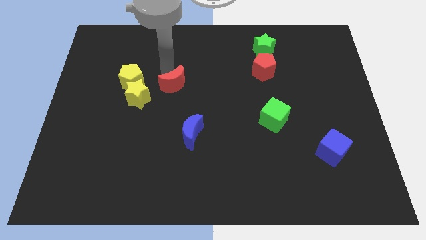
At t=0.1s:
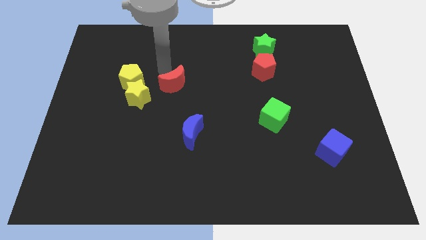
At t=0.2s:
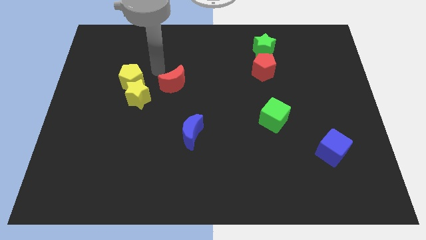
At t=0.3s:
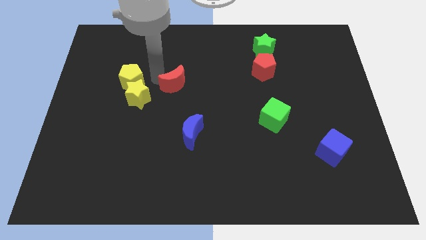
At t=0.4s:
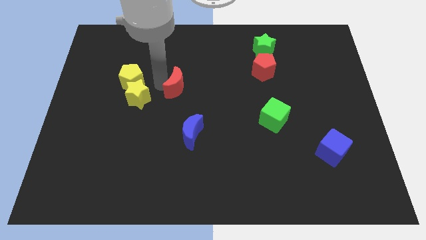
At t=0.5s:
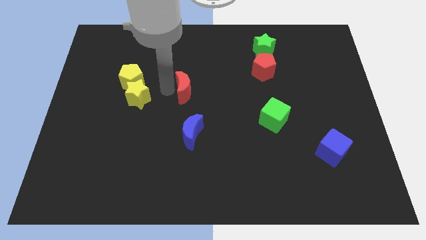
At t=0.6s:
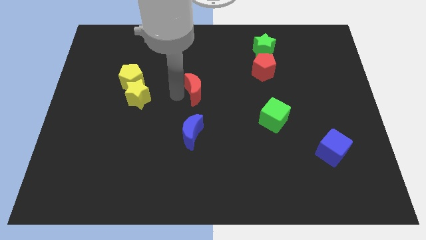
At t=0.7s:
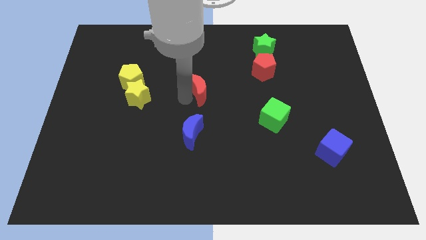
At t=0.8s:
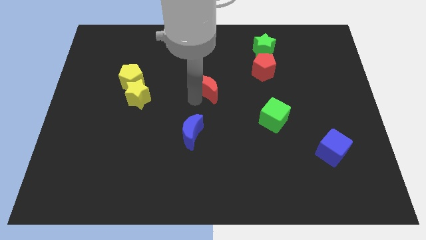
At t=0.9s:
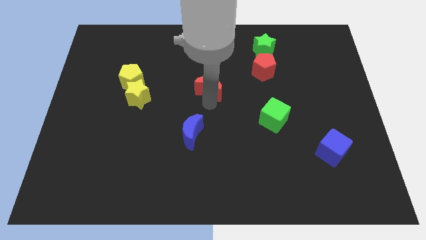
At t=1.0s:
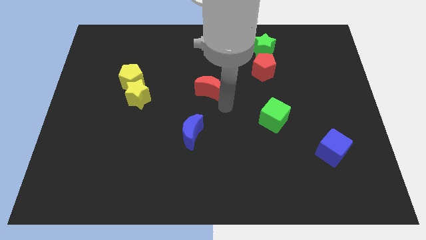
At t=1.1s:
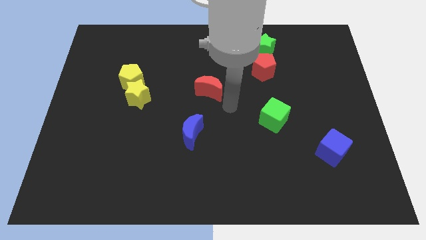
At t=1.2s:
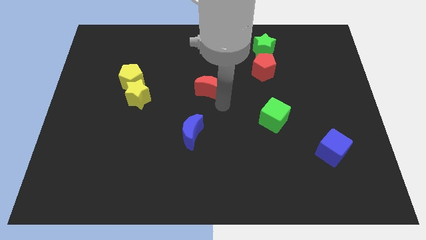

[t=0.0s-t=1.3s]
push the red crescent to the center of the board

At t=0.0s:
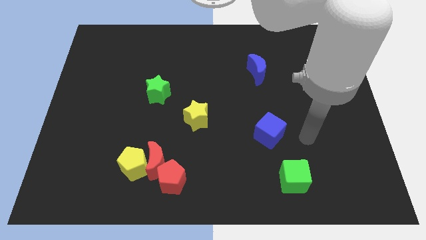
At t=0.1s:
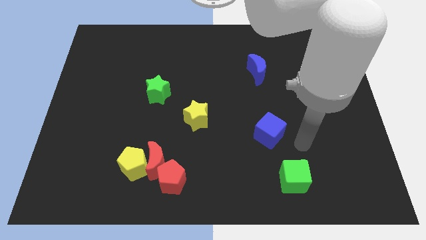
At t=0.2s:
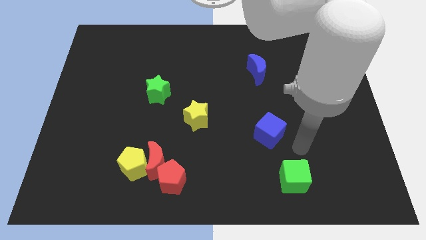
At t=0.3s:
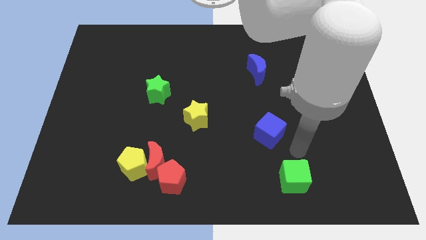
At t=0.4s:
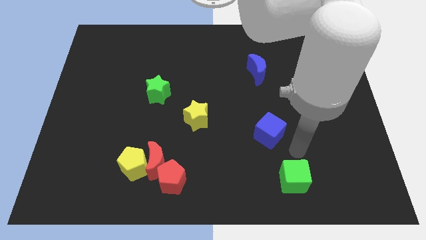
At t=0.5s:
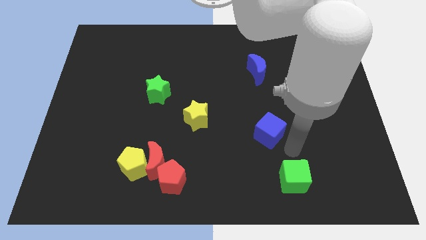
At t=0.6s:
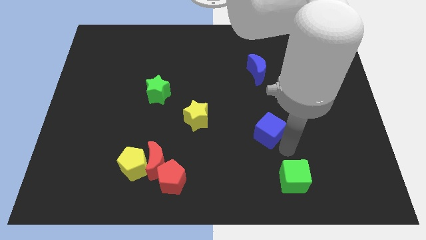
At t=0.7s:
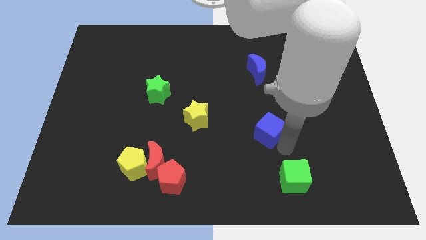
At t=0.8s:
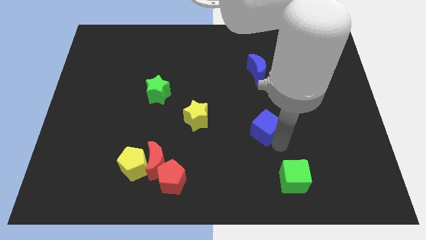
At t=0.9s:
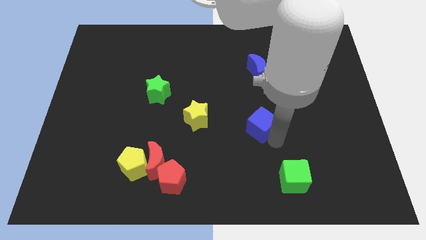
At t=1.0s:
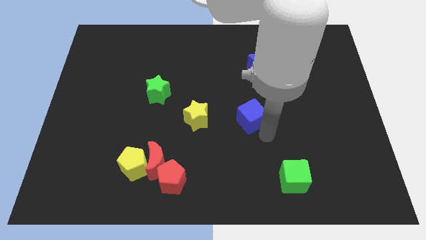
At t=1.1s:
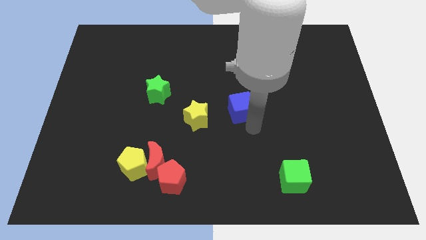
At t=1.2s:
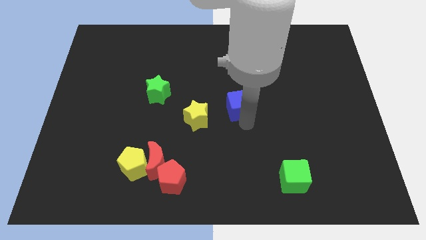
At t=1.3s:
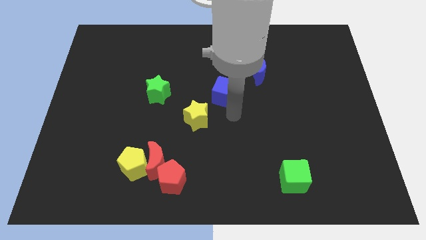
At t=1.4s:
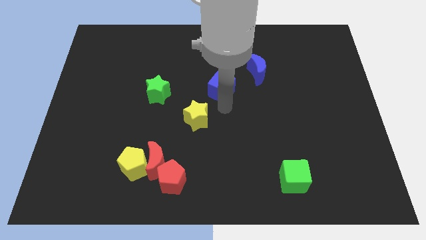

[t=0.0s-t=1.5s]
place the blue cube in between the blue moon and yellow star

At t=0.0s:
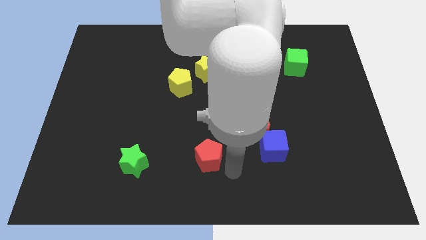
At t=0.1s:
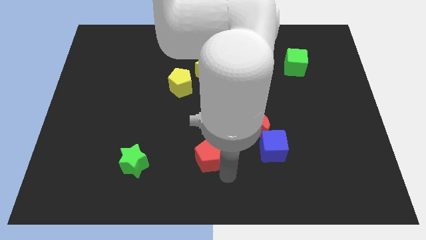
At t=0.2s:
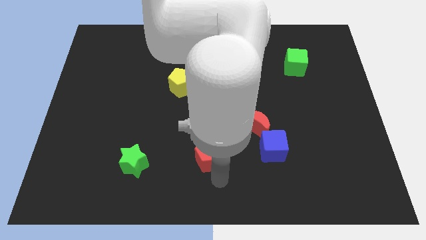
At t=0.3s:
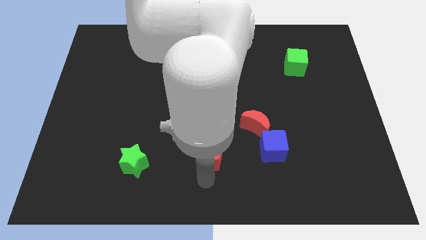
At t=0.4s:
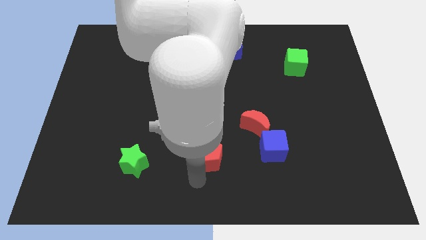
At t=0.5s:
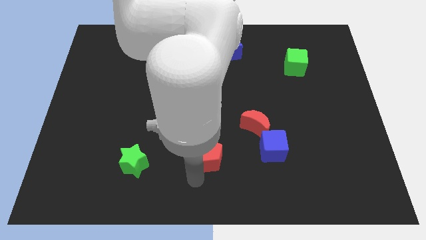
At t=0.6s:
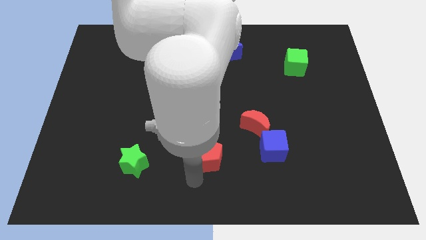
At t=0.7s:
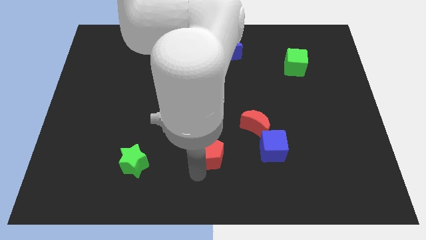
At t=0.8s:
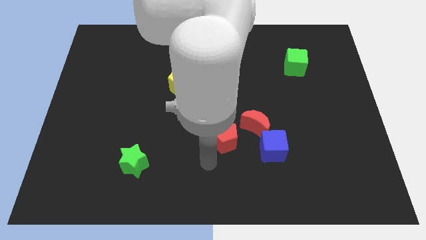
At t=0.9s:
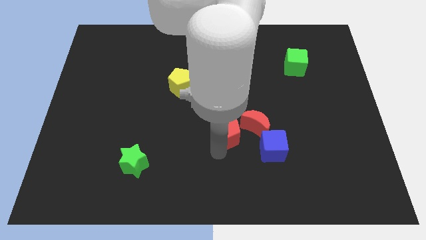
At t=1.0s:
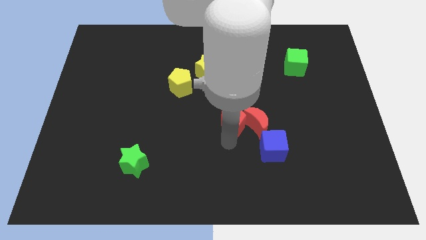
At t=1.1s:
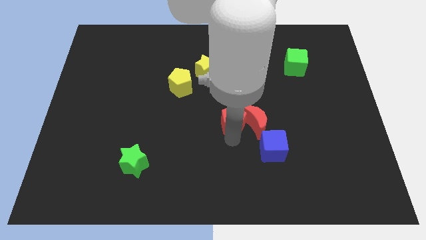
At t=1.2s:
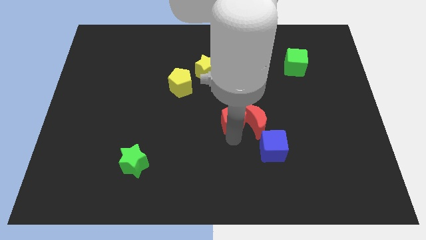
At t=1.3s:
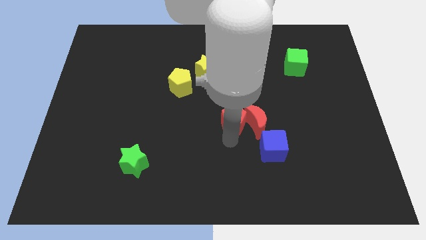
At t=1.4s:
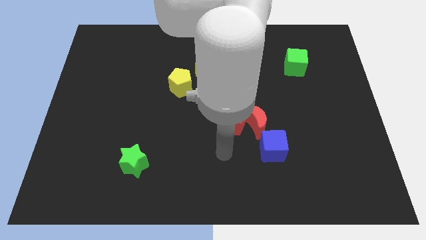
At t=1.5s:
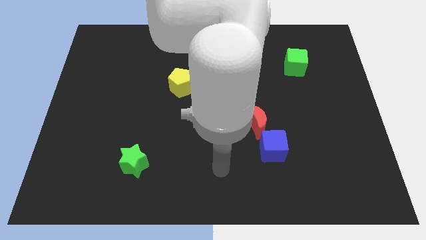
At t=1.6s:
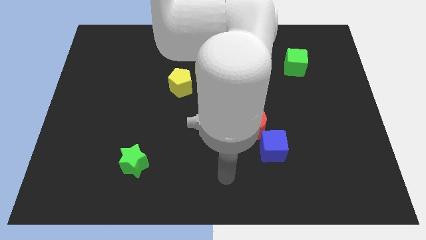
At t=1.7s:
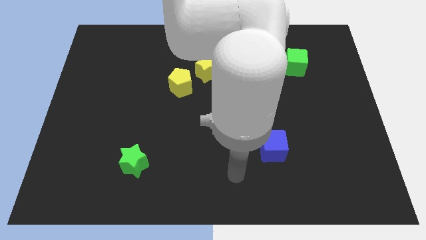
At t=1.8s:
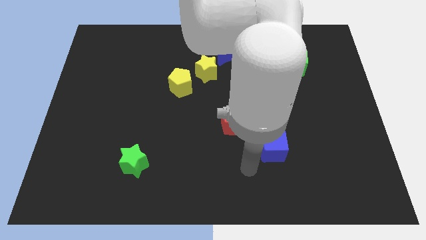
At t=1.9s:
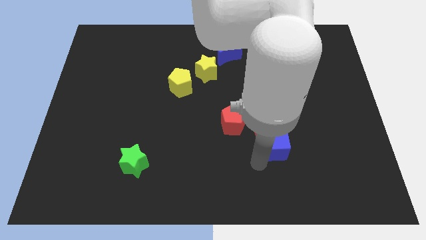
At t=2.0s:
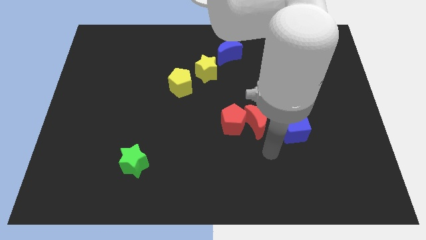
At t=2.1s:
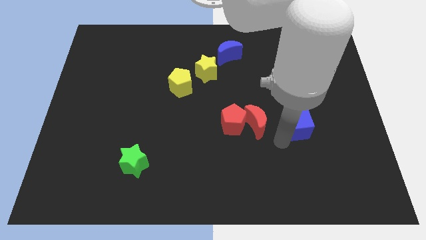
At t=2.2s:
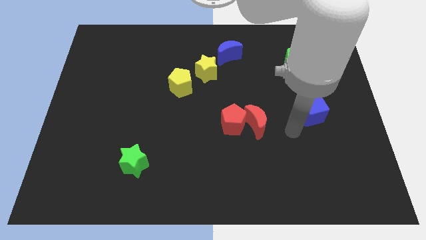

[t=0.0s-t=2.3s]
place blue cube parallel to red moon

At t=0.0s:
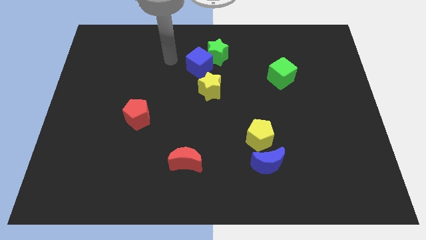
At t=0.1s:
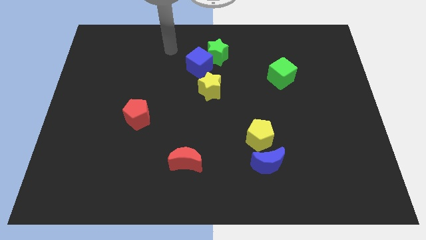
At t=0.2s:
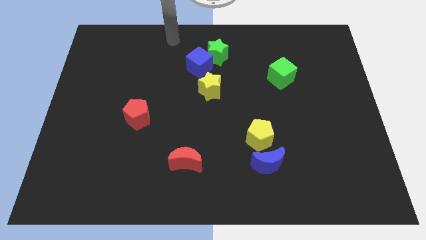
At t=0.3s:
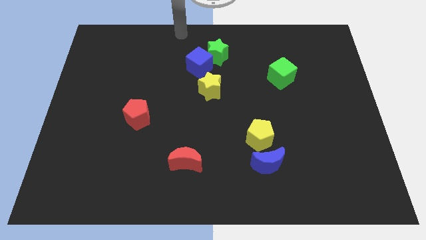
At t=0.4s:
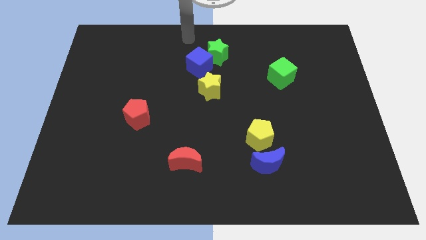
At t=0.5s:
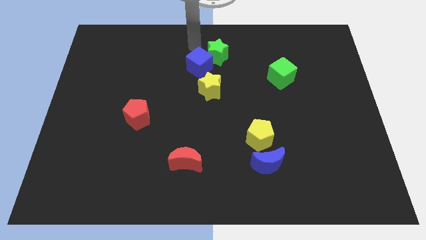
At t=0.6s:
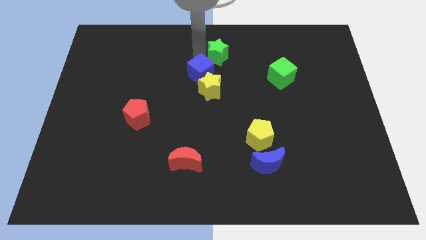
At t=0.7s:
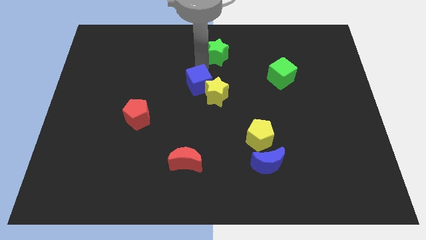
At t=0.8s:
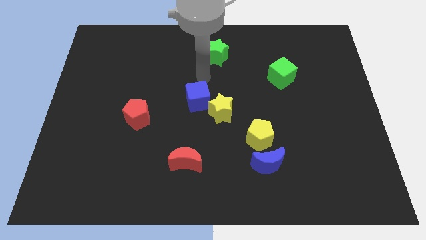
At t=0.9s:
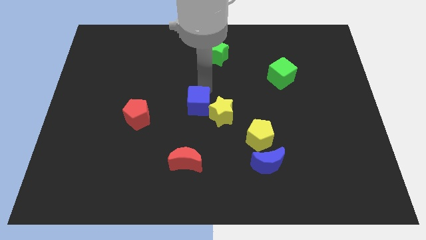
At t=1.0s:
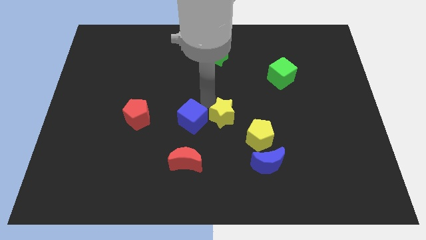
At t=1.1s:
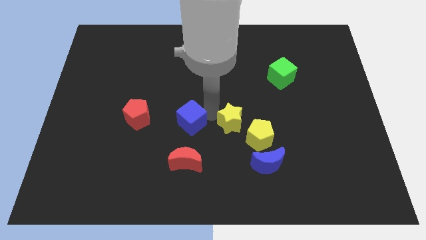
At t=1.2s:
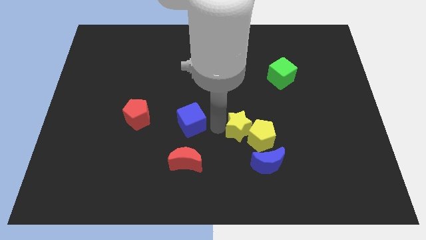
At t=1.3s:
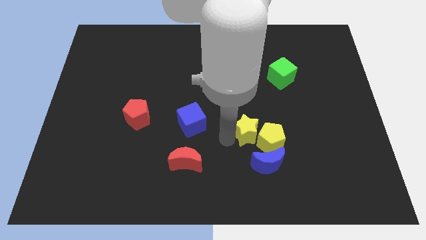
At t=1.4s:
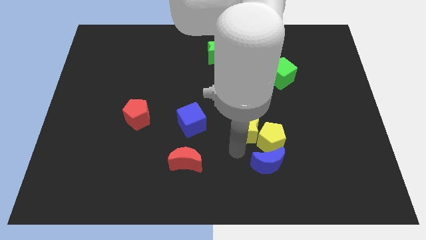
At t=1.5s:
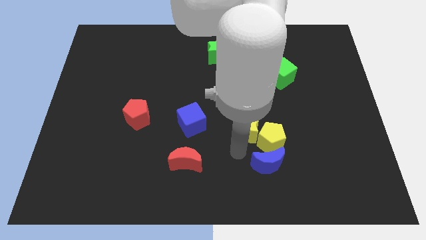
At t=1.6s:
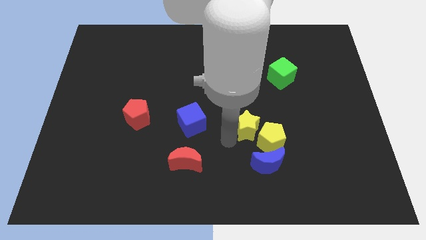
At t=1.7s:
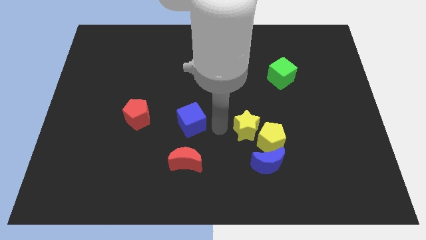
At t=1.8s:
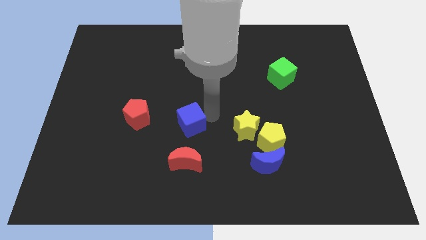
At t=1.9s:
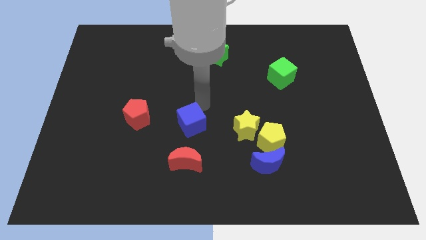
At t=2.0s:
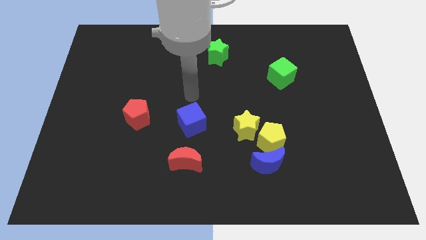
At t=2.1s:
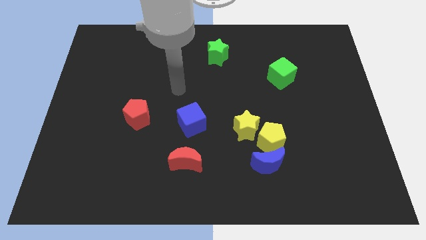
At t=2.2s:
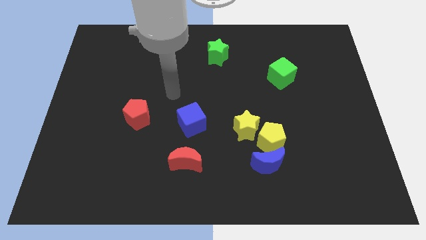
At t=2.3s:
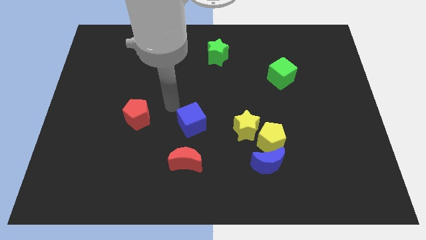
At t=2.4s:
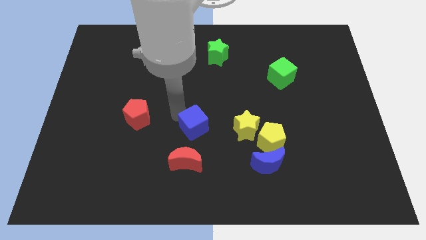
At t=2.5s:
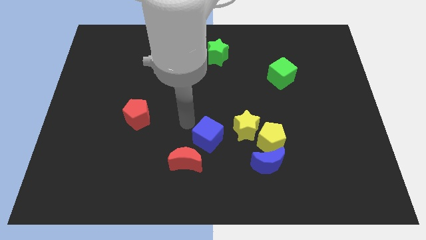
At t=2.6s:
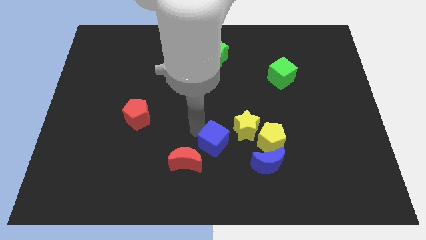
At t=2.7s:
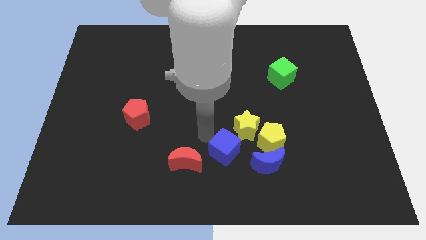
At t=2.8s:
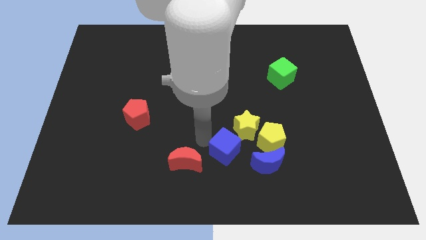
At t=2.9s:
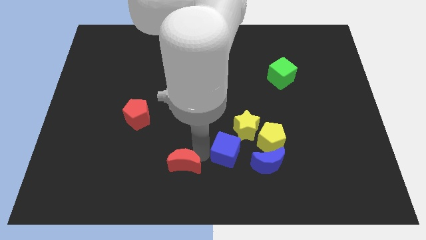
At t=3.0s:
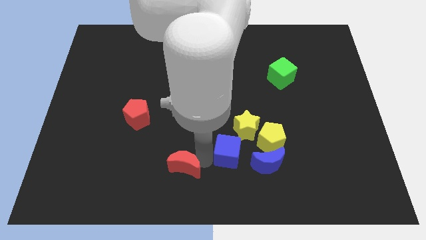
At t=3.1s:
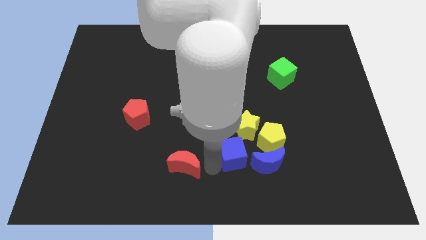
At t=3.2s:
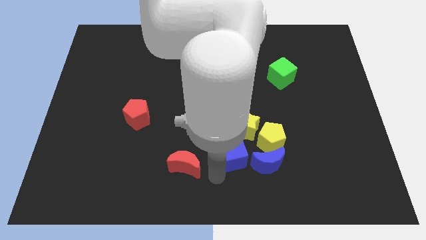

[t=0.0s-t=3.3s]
push the yellow and blue blocks together to the right of the red blocks

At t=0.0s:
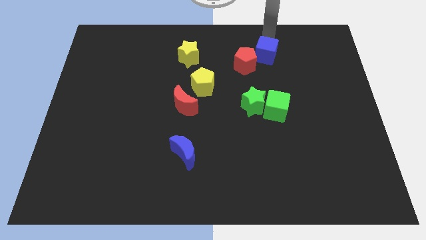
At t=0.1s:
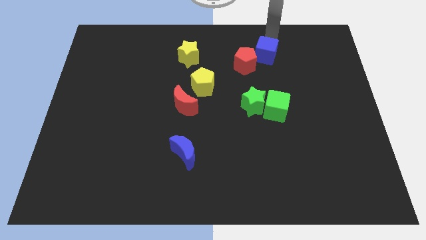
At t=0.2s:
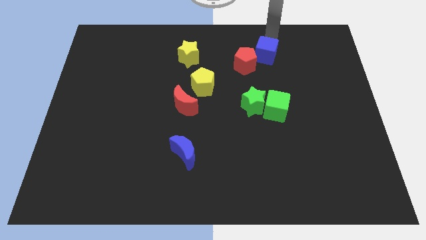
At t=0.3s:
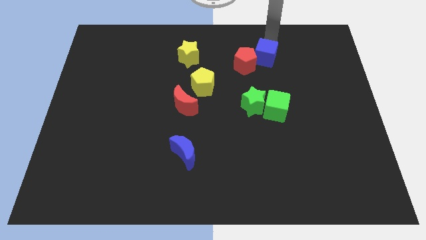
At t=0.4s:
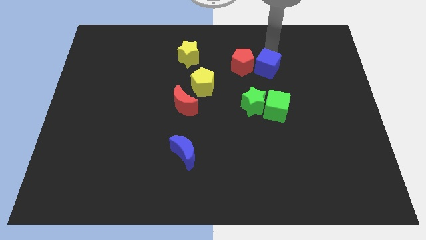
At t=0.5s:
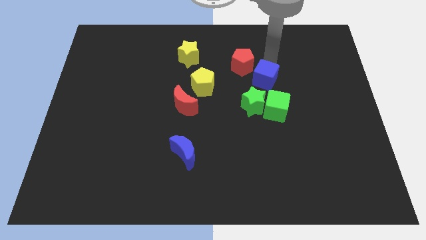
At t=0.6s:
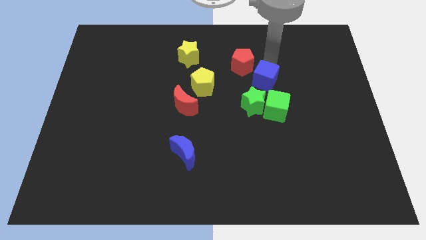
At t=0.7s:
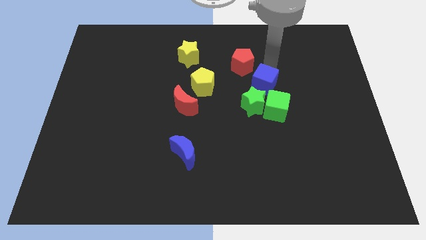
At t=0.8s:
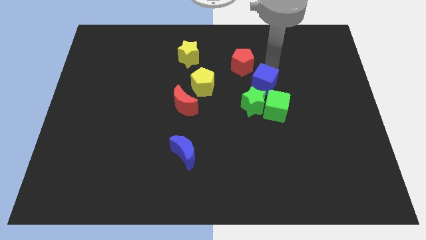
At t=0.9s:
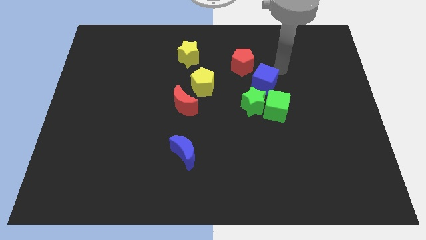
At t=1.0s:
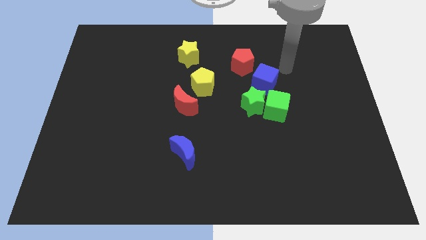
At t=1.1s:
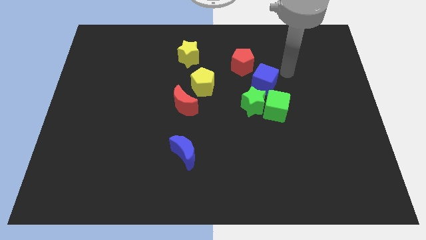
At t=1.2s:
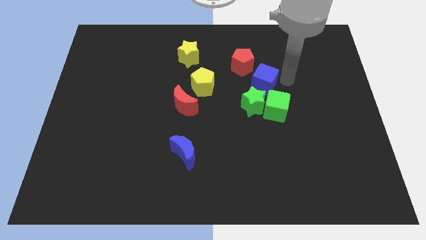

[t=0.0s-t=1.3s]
place the blue cube at the bottom of green star
